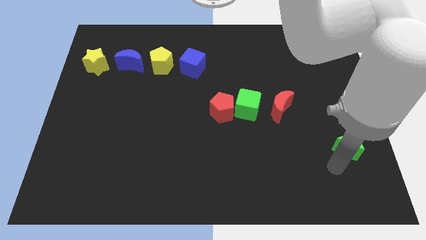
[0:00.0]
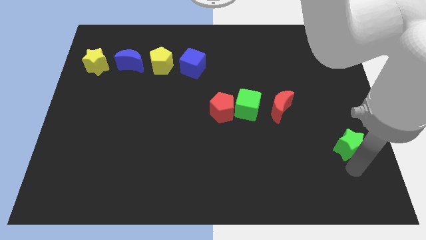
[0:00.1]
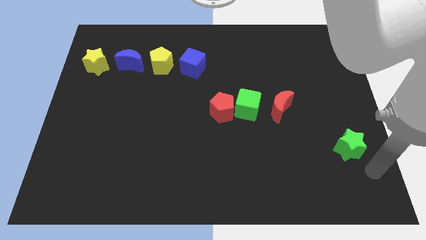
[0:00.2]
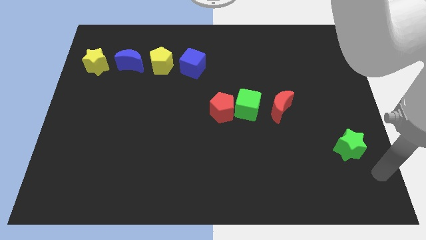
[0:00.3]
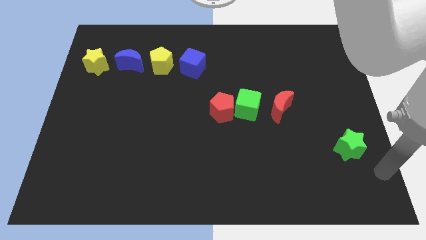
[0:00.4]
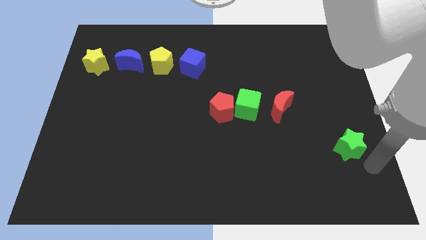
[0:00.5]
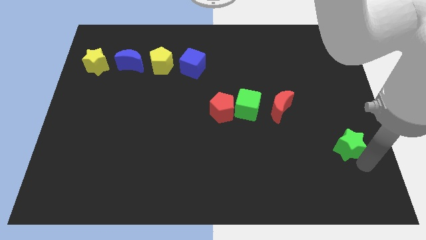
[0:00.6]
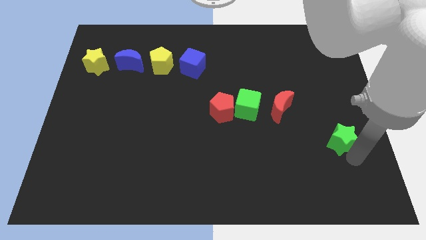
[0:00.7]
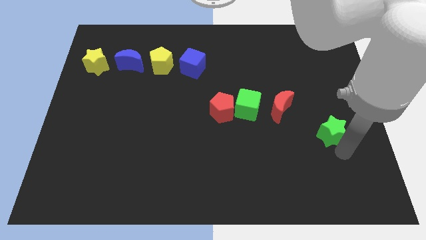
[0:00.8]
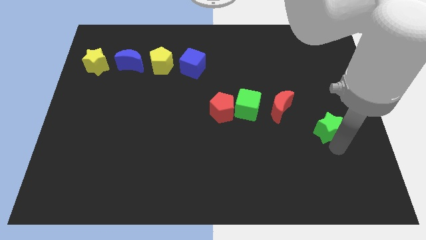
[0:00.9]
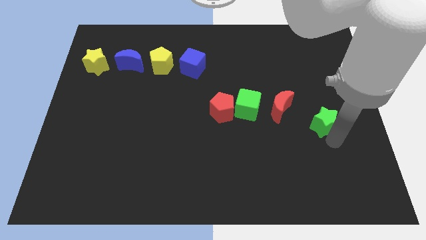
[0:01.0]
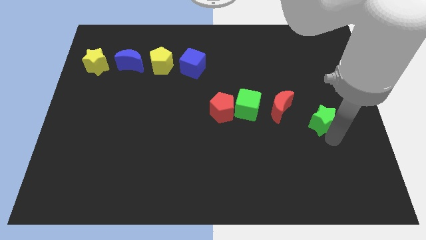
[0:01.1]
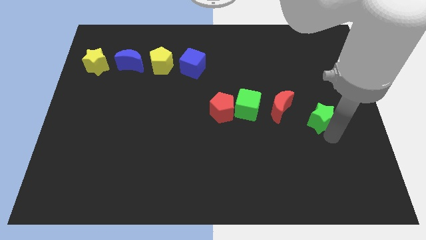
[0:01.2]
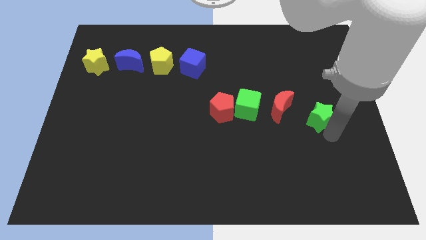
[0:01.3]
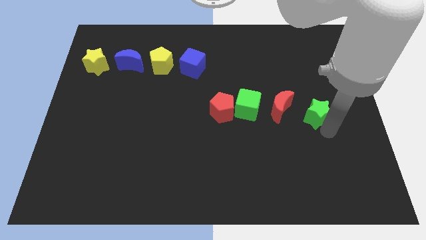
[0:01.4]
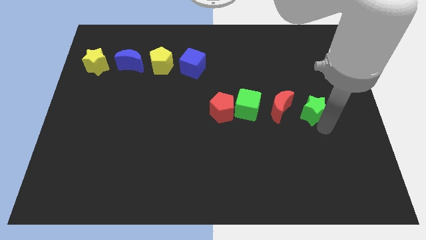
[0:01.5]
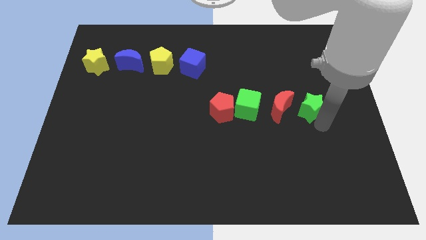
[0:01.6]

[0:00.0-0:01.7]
put the green star to the right side of the red crescent

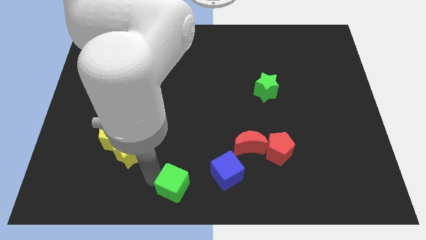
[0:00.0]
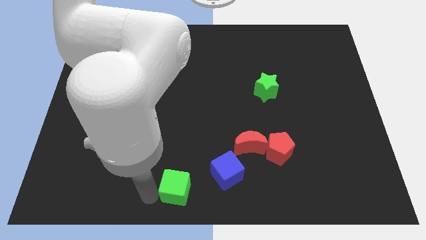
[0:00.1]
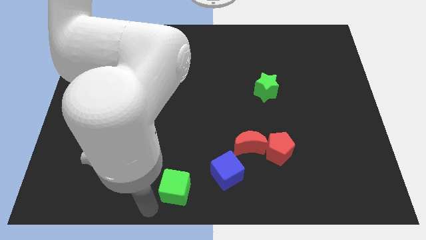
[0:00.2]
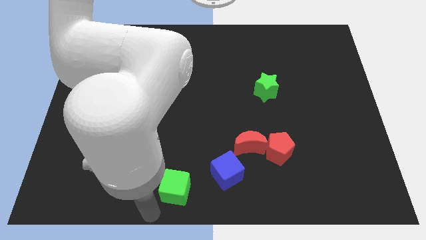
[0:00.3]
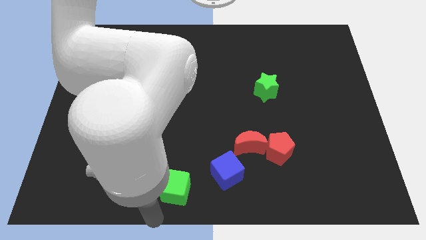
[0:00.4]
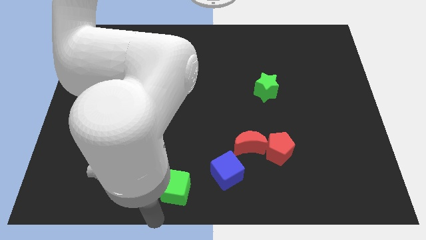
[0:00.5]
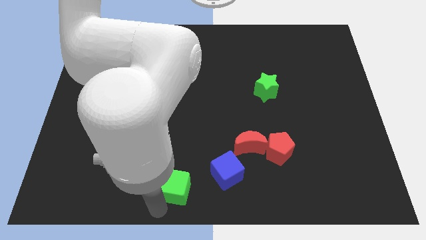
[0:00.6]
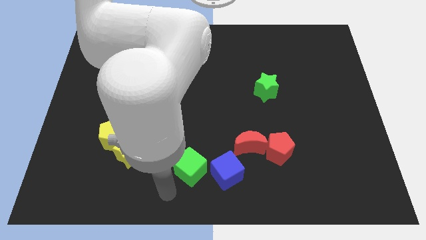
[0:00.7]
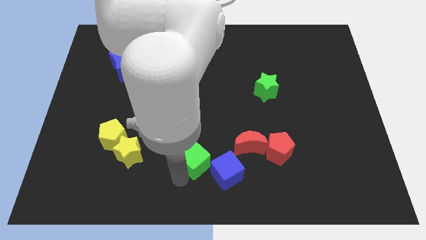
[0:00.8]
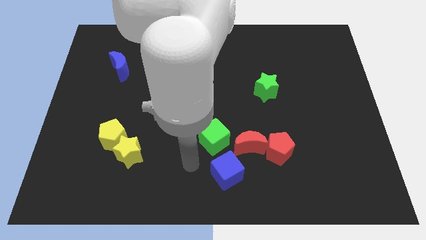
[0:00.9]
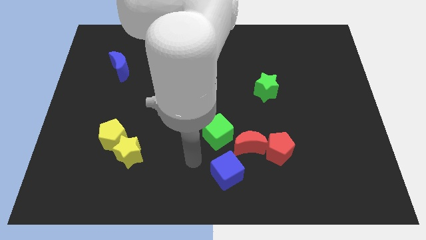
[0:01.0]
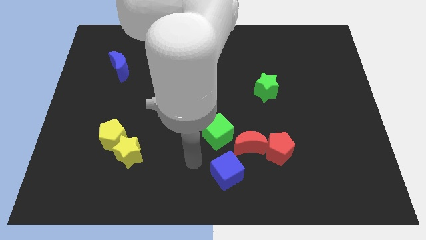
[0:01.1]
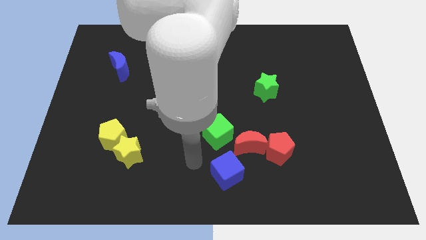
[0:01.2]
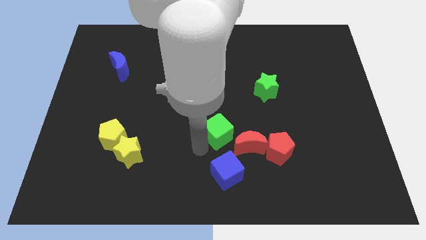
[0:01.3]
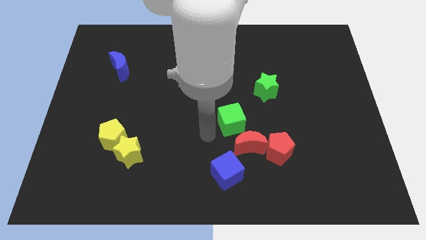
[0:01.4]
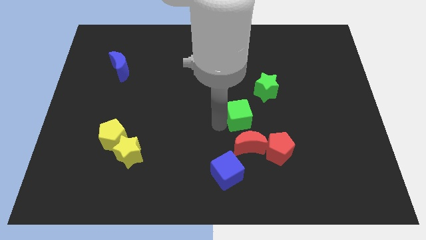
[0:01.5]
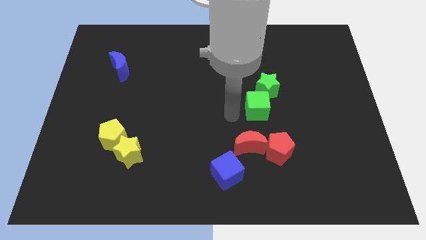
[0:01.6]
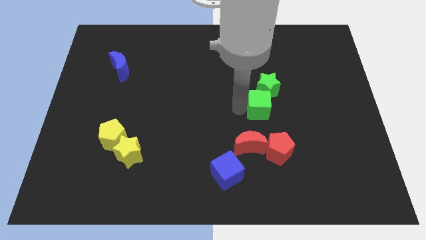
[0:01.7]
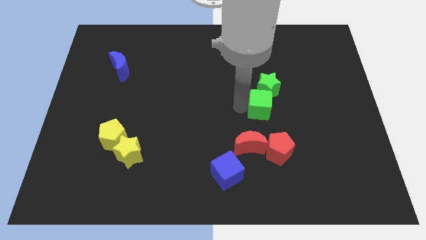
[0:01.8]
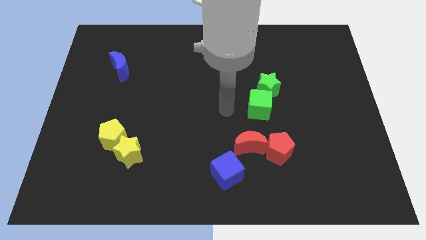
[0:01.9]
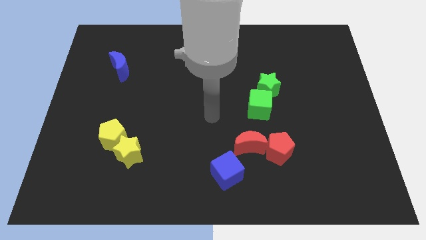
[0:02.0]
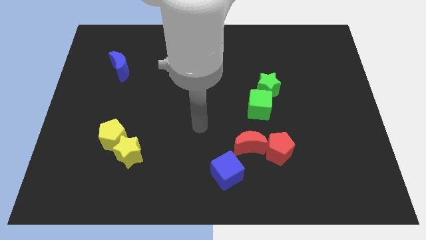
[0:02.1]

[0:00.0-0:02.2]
place the green cube below the green star

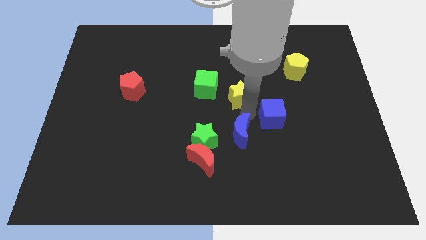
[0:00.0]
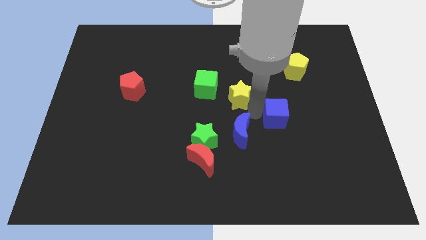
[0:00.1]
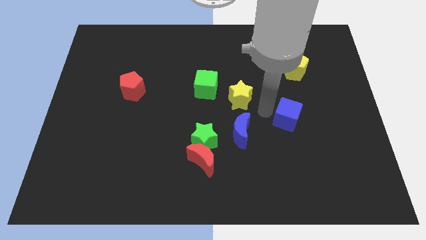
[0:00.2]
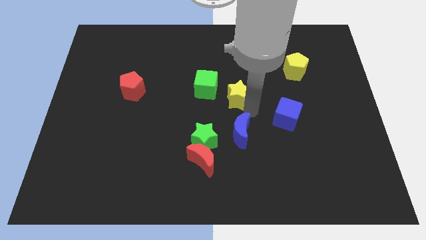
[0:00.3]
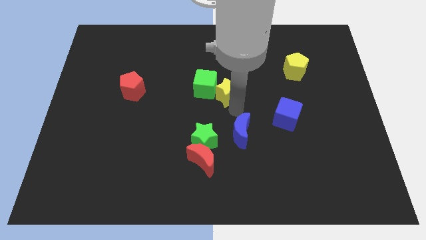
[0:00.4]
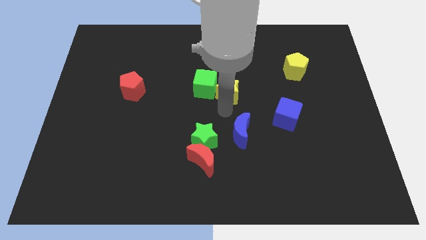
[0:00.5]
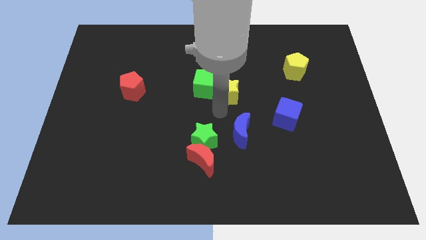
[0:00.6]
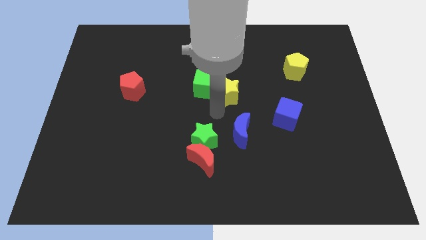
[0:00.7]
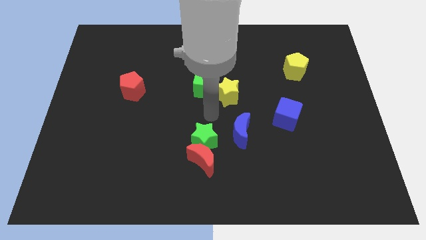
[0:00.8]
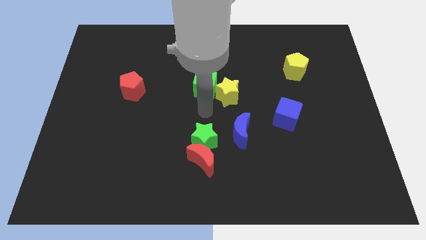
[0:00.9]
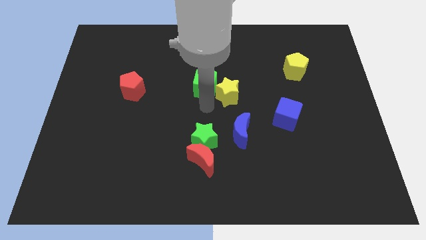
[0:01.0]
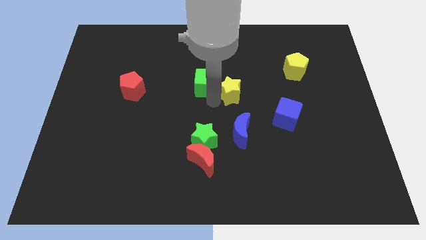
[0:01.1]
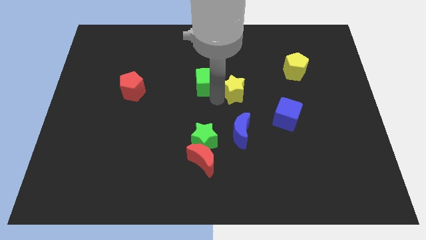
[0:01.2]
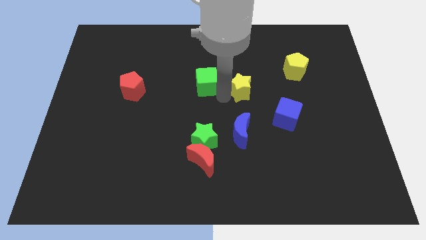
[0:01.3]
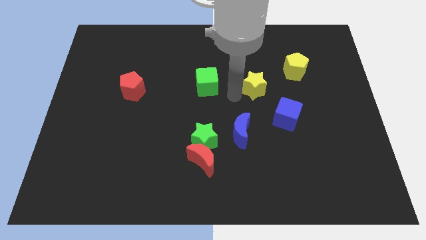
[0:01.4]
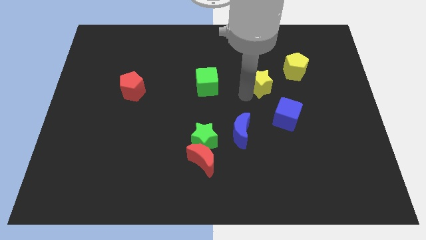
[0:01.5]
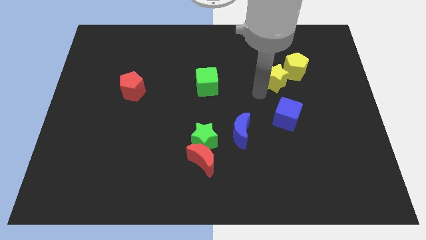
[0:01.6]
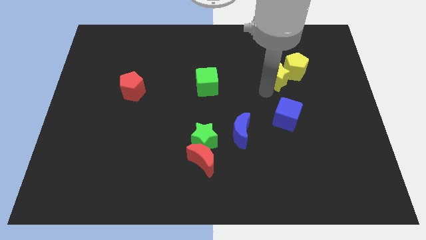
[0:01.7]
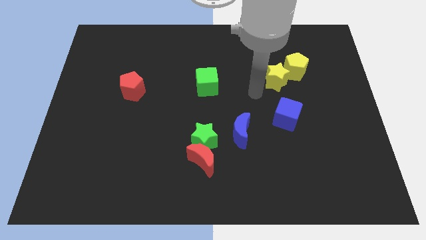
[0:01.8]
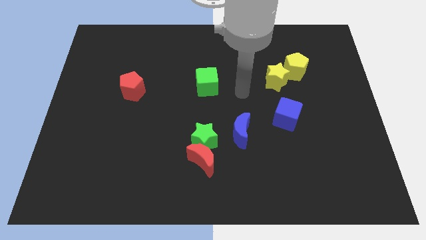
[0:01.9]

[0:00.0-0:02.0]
slide the yellow star towards the bottom left side of the yellow pentagon

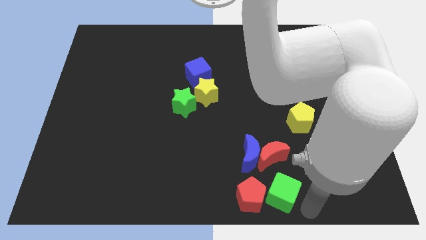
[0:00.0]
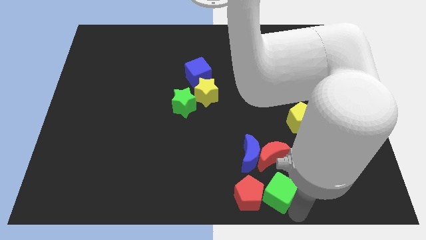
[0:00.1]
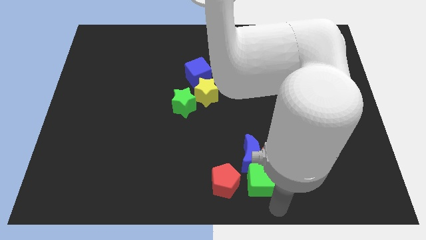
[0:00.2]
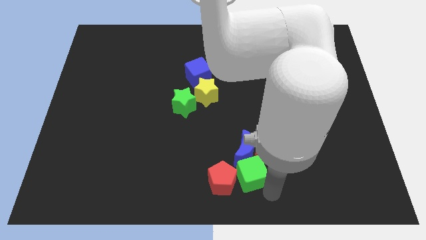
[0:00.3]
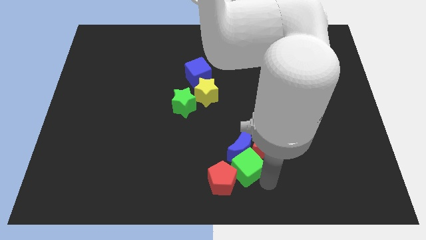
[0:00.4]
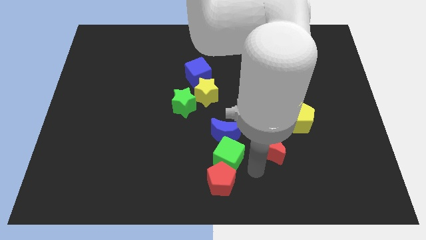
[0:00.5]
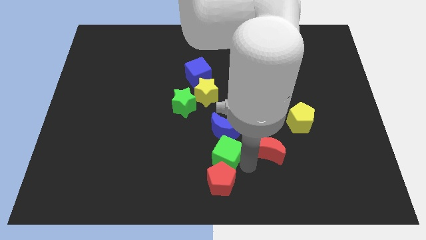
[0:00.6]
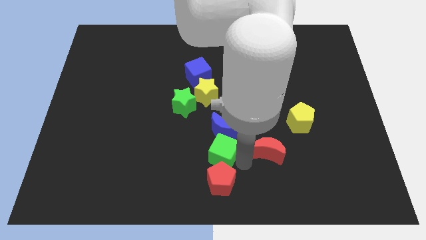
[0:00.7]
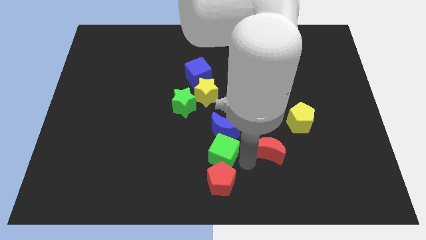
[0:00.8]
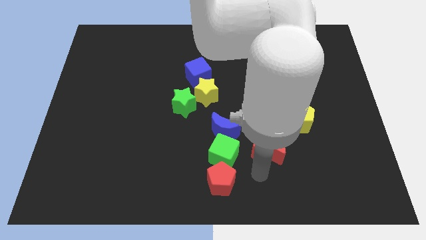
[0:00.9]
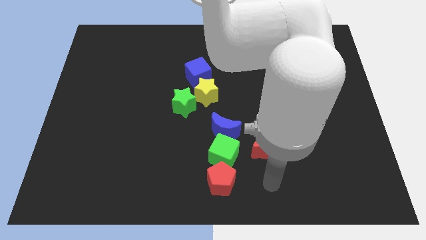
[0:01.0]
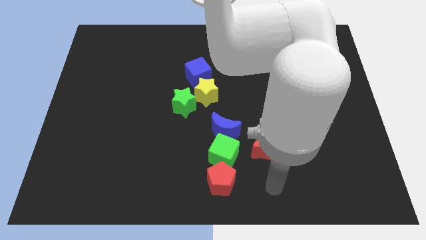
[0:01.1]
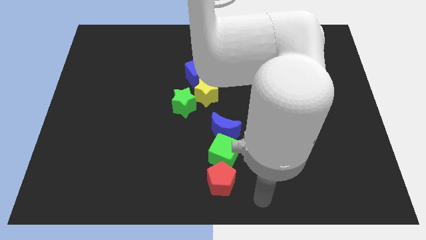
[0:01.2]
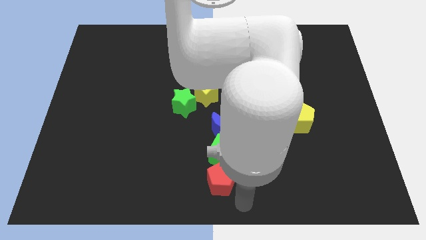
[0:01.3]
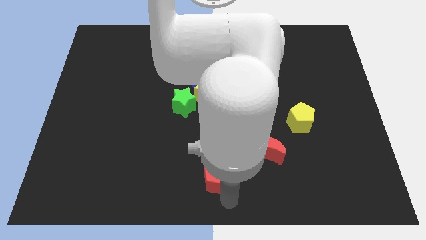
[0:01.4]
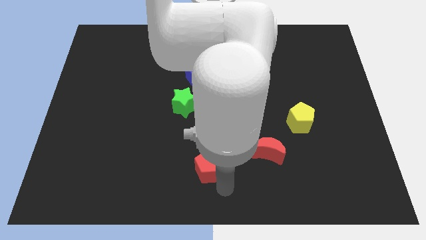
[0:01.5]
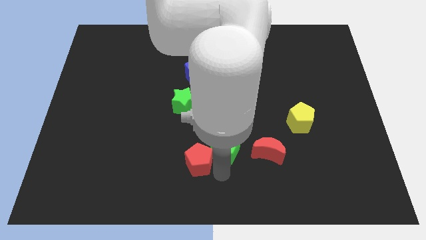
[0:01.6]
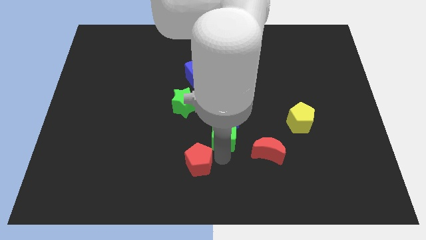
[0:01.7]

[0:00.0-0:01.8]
push the group of blocks to the center of the board

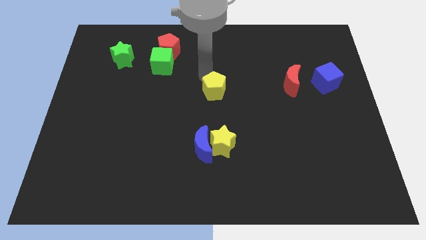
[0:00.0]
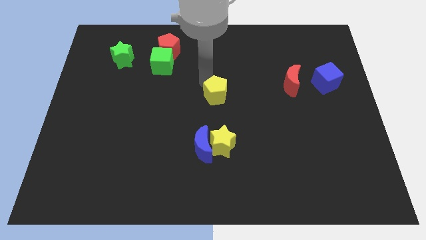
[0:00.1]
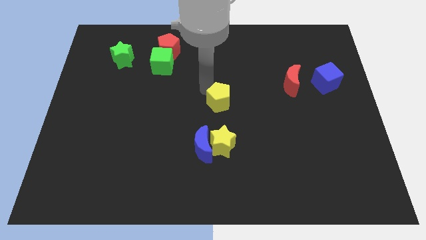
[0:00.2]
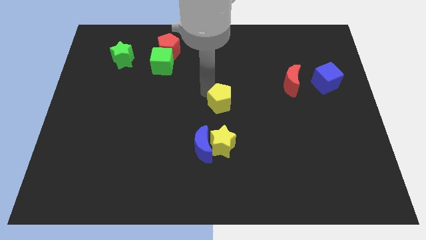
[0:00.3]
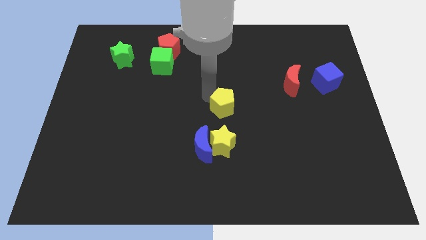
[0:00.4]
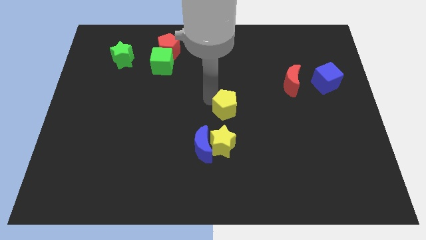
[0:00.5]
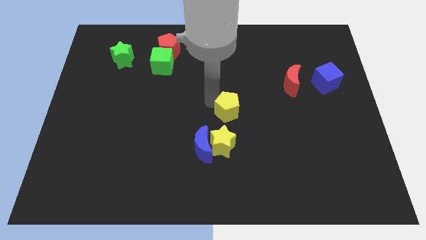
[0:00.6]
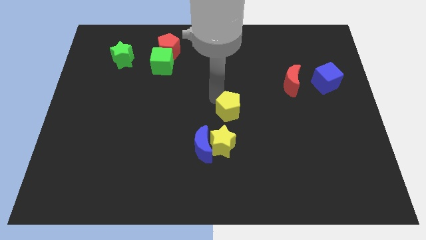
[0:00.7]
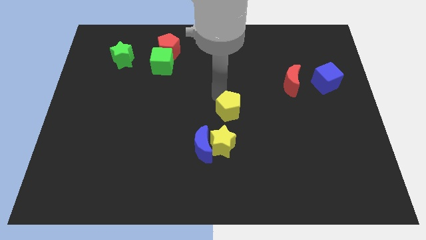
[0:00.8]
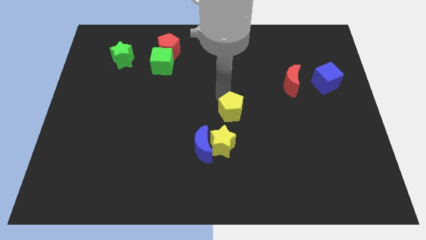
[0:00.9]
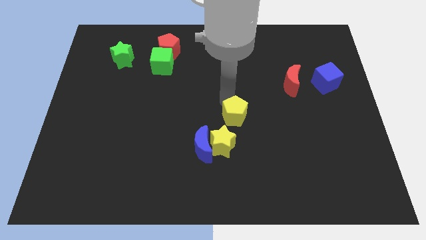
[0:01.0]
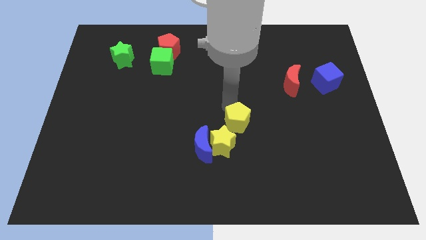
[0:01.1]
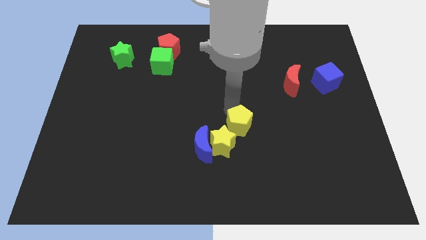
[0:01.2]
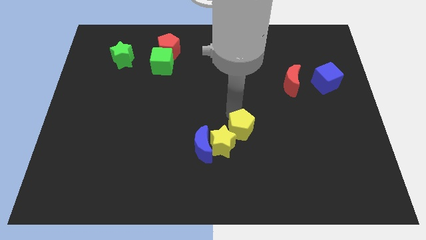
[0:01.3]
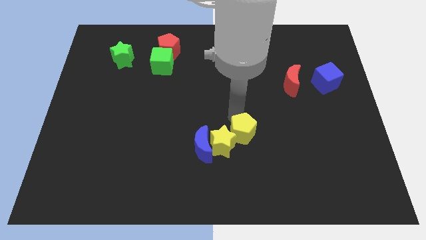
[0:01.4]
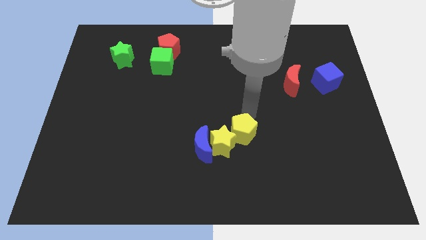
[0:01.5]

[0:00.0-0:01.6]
put the yellow pentagon at the top right of the yellow star
